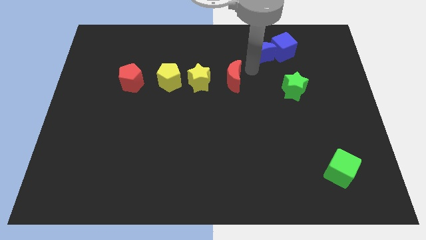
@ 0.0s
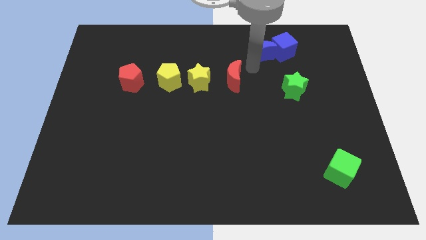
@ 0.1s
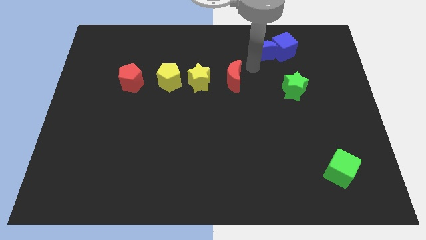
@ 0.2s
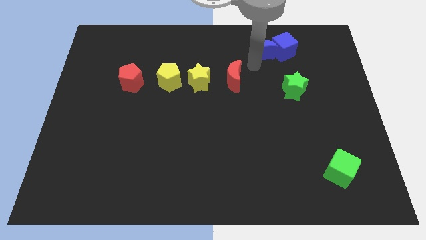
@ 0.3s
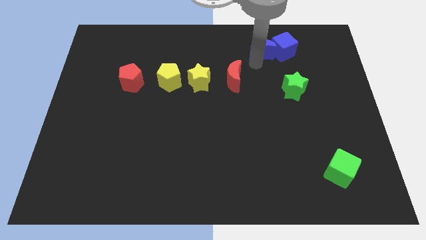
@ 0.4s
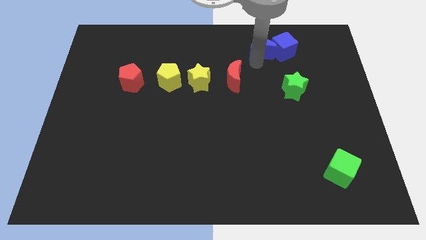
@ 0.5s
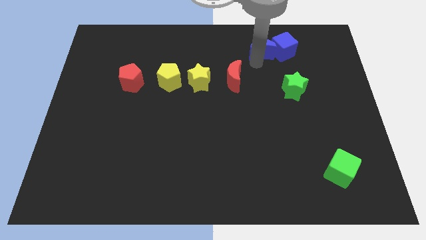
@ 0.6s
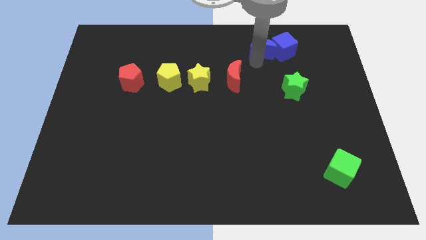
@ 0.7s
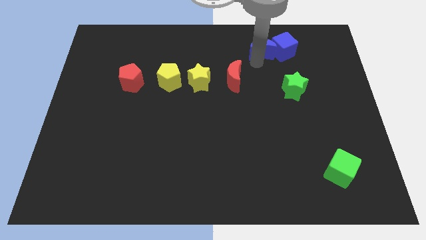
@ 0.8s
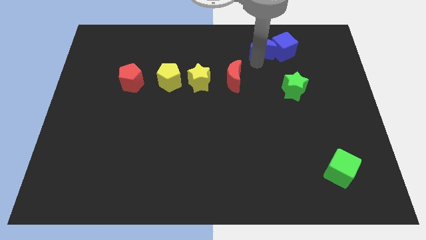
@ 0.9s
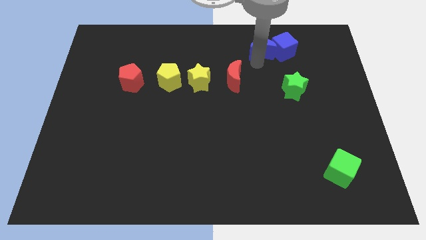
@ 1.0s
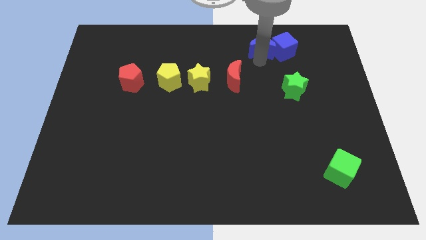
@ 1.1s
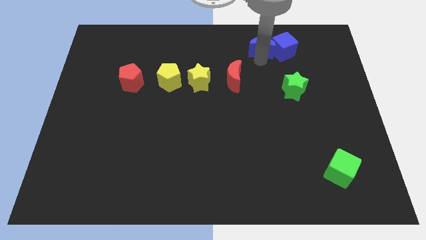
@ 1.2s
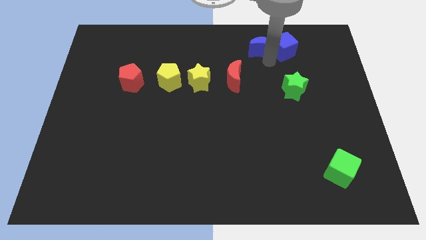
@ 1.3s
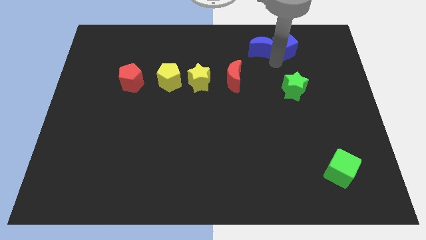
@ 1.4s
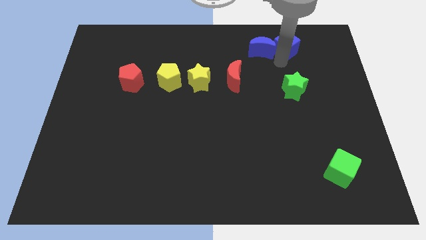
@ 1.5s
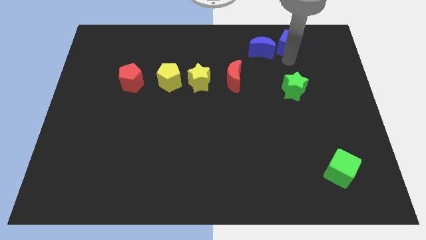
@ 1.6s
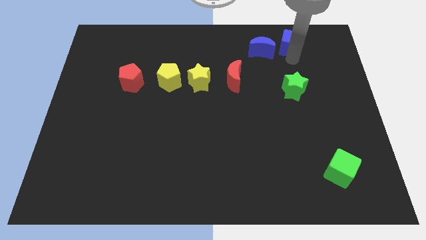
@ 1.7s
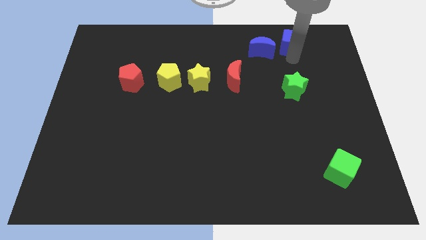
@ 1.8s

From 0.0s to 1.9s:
push the blue moon and blue cube slightly to the top side of the board

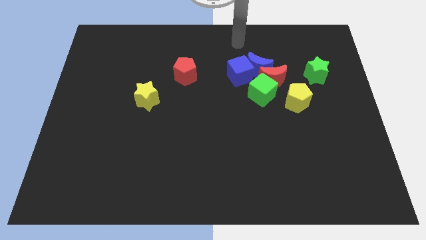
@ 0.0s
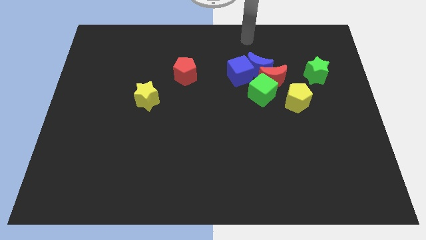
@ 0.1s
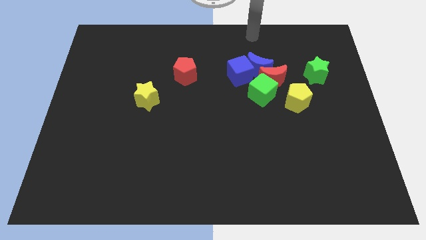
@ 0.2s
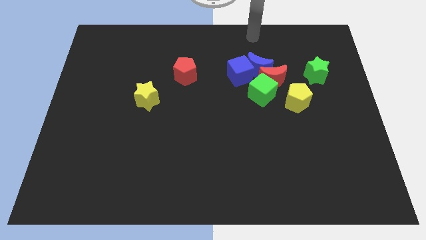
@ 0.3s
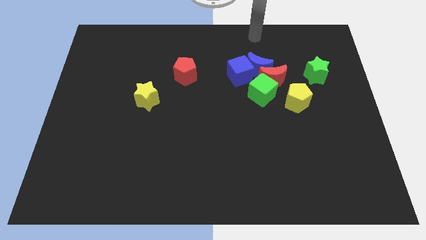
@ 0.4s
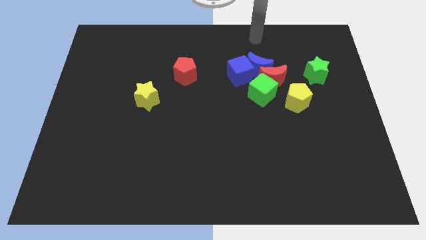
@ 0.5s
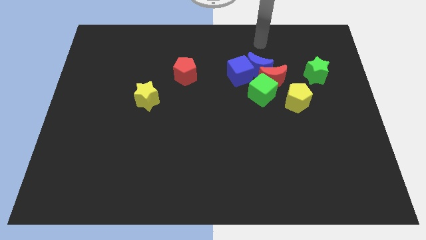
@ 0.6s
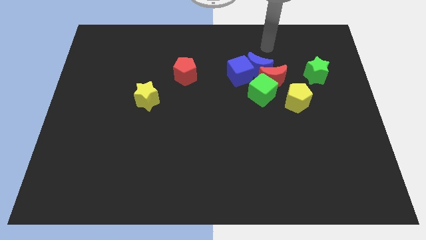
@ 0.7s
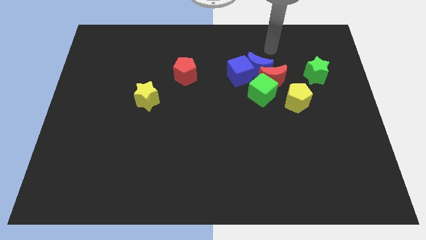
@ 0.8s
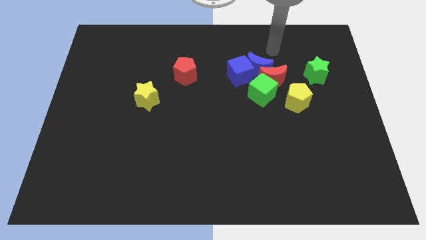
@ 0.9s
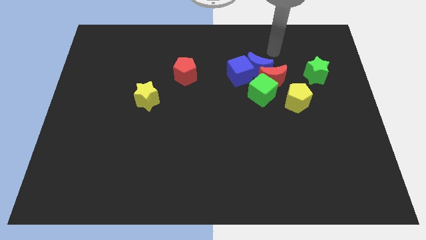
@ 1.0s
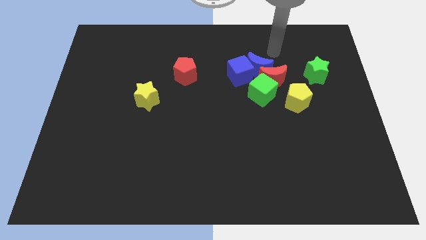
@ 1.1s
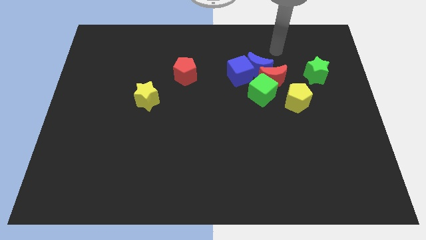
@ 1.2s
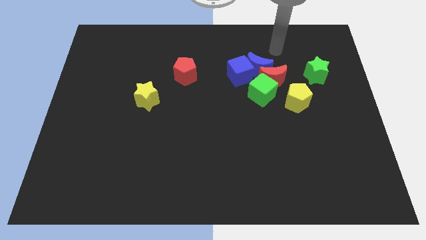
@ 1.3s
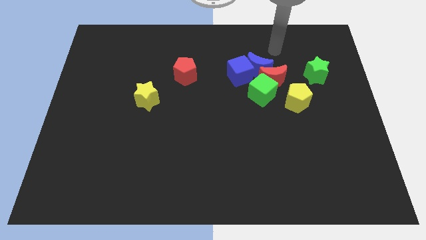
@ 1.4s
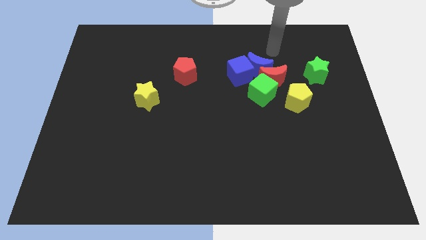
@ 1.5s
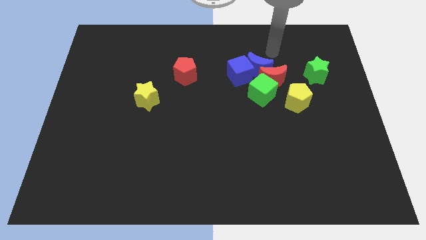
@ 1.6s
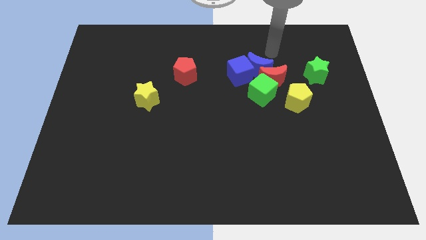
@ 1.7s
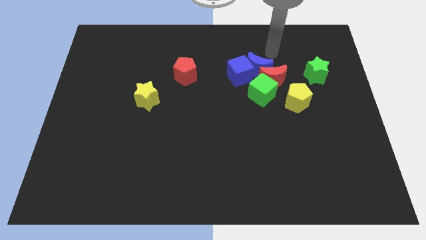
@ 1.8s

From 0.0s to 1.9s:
slide the pointer close to the blue moon

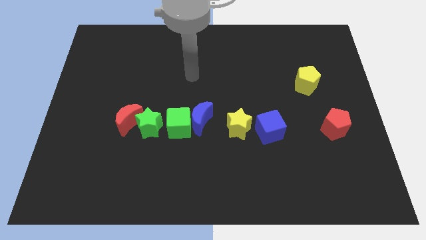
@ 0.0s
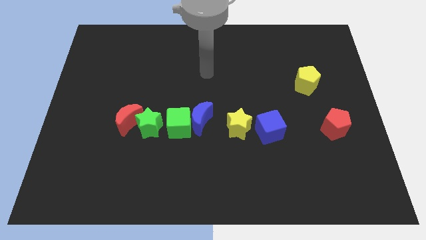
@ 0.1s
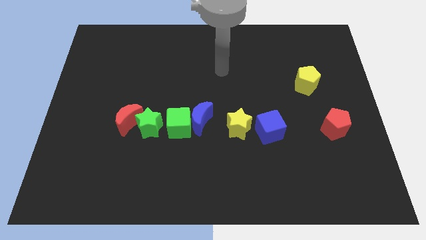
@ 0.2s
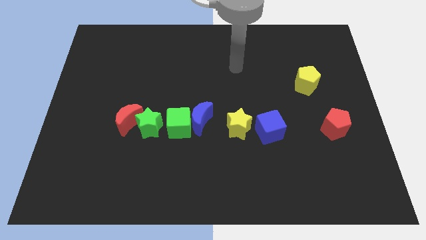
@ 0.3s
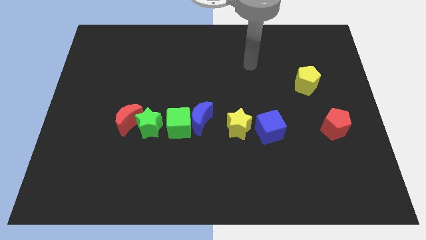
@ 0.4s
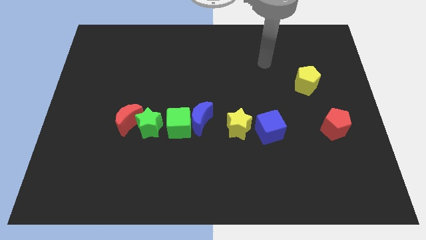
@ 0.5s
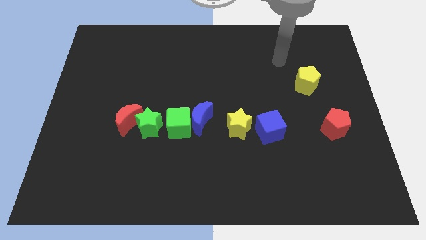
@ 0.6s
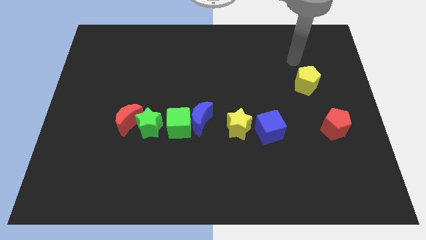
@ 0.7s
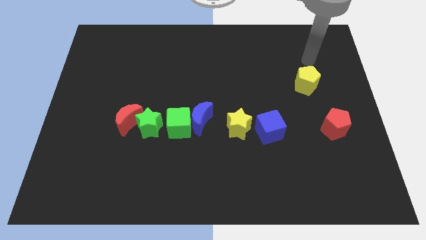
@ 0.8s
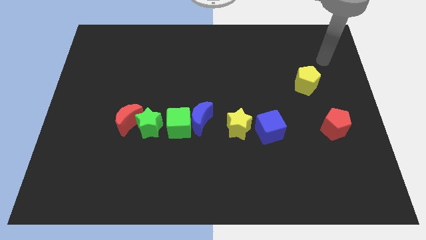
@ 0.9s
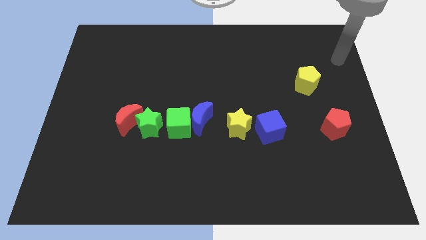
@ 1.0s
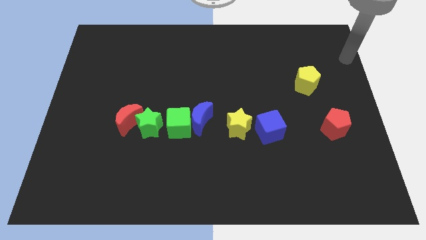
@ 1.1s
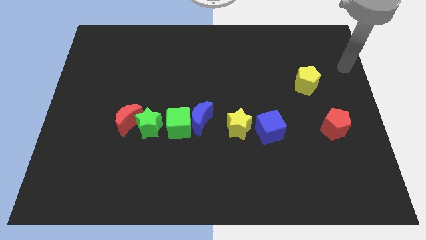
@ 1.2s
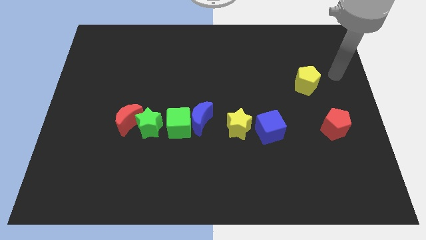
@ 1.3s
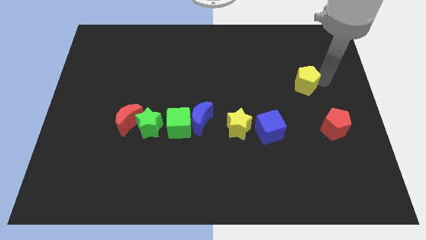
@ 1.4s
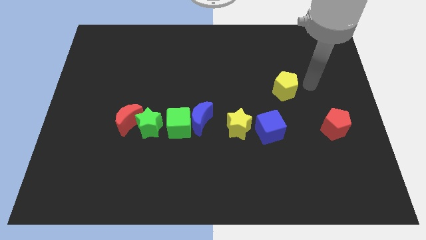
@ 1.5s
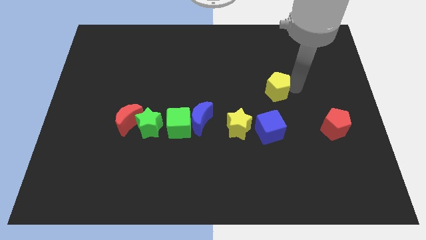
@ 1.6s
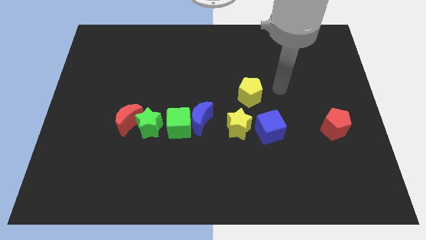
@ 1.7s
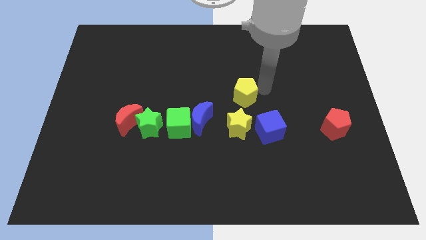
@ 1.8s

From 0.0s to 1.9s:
move the yellow pentagon to the top of yellow star

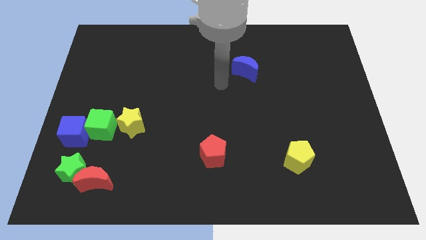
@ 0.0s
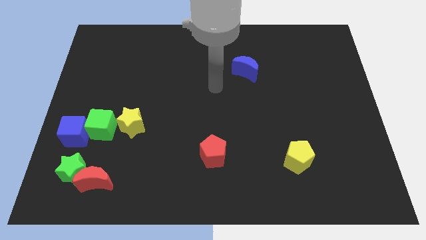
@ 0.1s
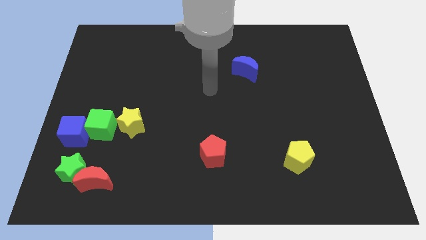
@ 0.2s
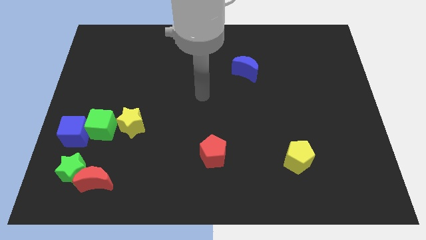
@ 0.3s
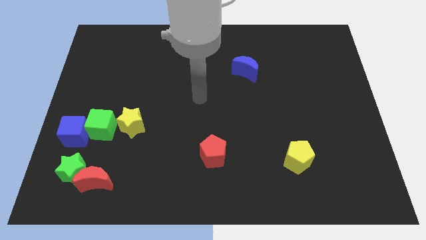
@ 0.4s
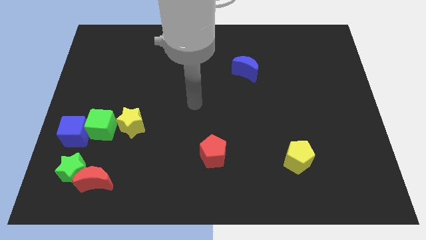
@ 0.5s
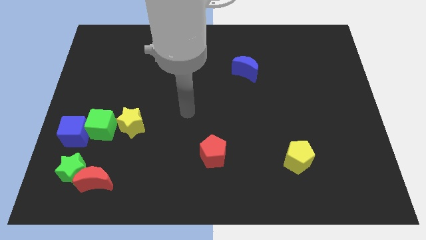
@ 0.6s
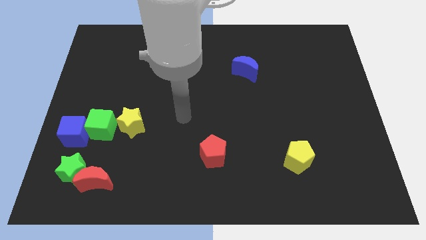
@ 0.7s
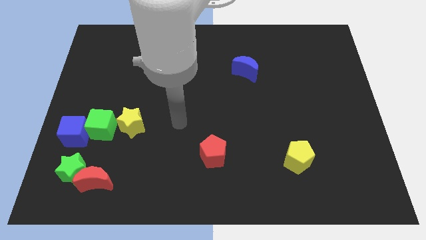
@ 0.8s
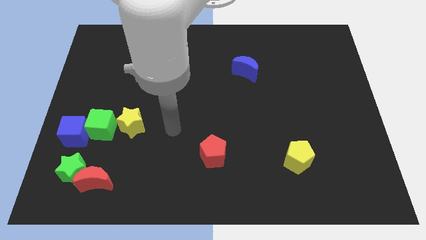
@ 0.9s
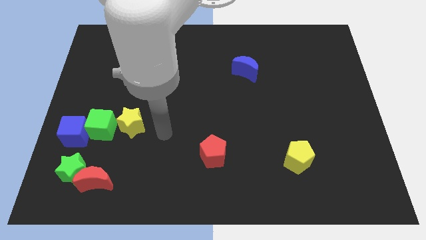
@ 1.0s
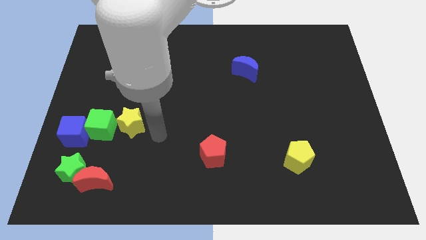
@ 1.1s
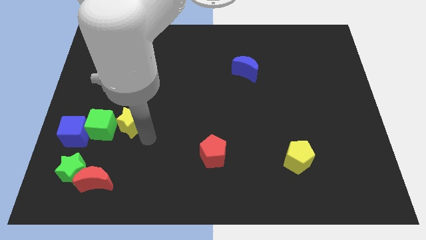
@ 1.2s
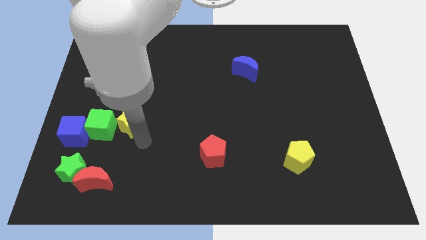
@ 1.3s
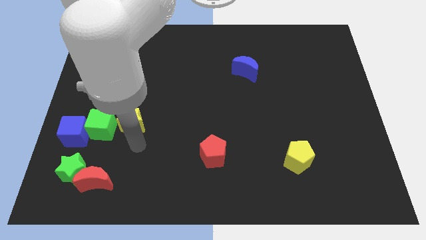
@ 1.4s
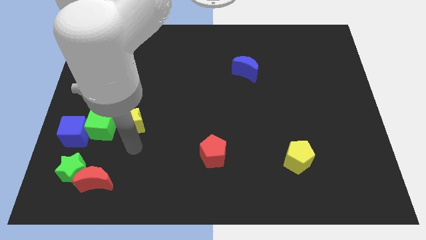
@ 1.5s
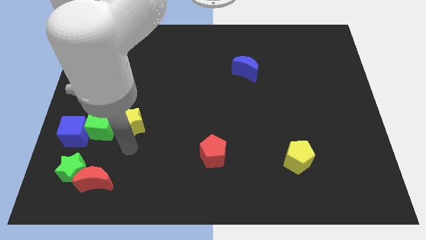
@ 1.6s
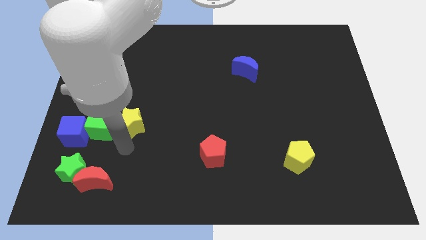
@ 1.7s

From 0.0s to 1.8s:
point the arm to the bottom side of the yellow star

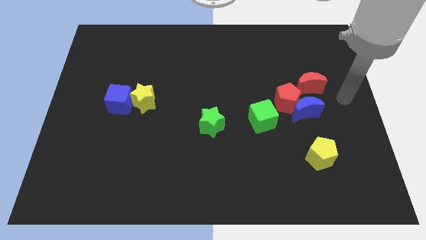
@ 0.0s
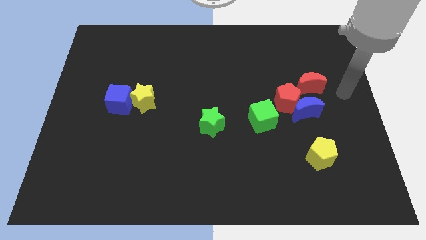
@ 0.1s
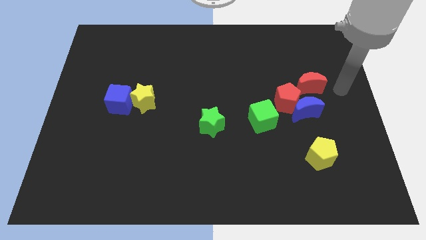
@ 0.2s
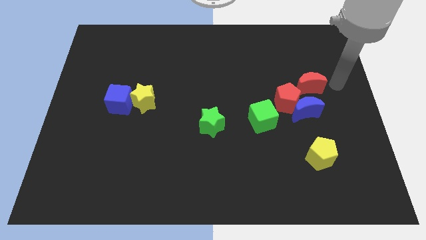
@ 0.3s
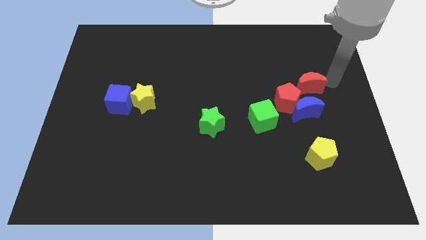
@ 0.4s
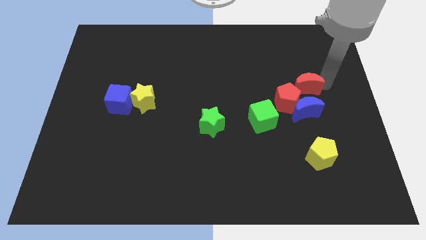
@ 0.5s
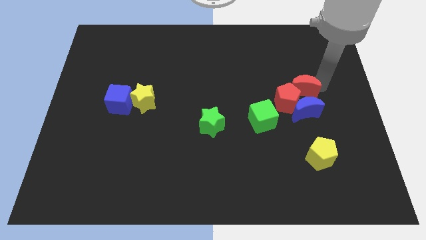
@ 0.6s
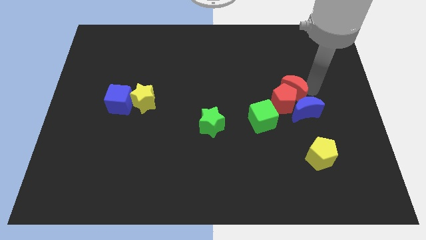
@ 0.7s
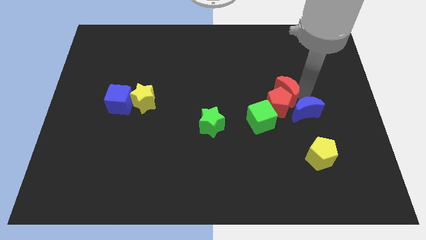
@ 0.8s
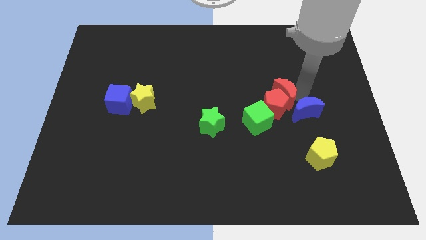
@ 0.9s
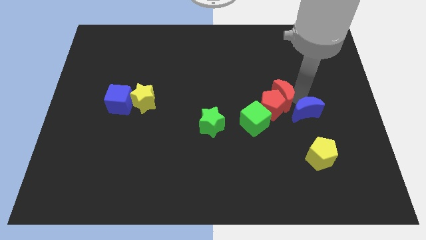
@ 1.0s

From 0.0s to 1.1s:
move red moon into red pentagon

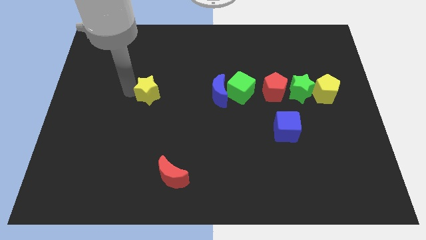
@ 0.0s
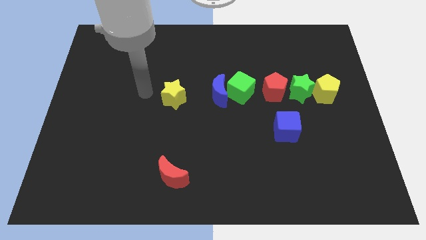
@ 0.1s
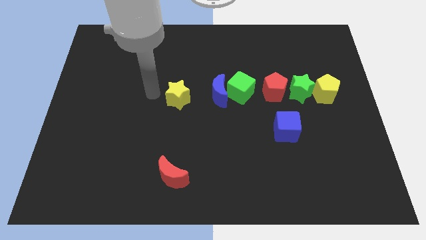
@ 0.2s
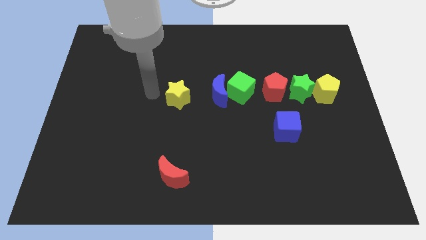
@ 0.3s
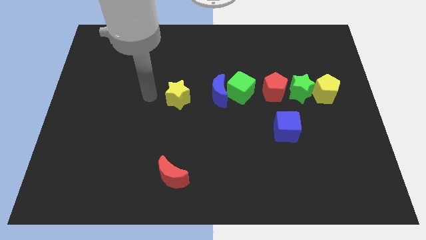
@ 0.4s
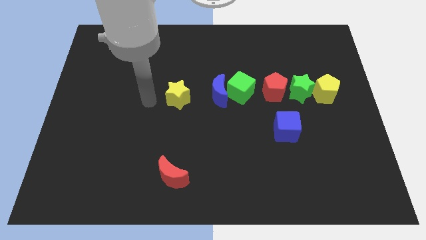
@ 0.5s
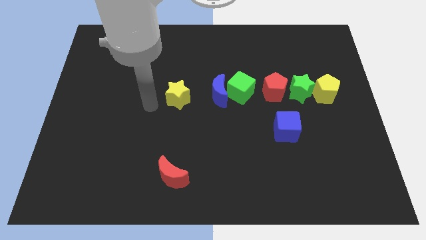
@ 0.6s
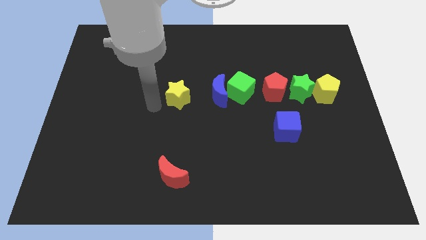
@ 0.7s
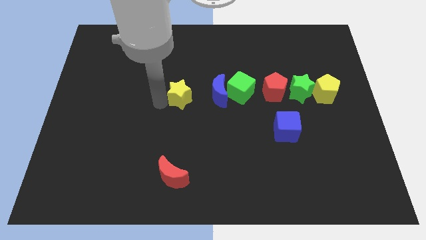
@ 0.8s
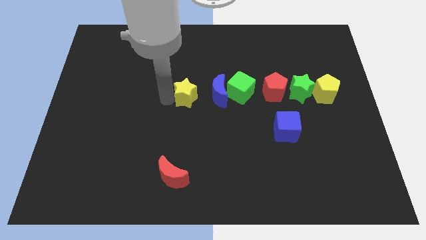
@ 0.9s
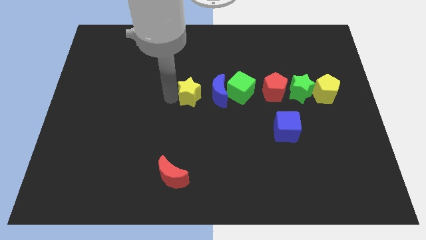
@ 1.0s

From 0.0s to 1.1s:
move yellow star towards blue moon
